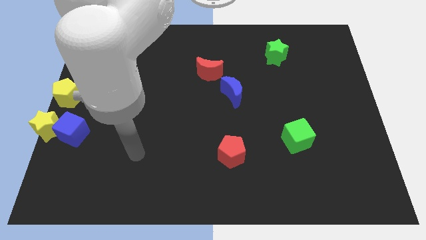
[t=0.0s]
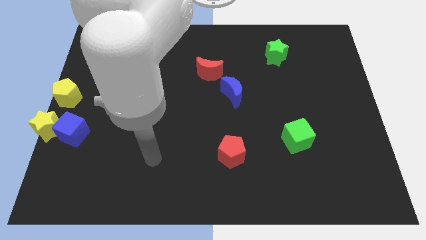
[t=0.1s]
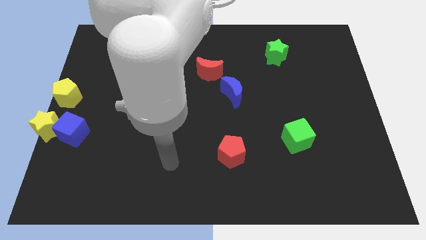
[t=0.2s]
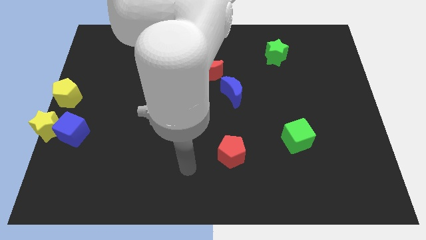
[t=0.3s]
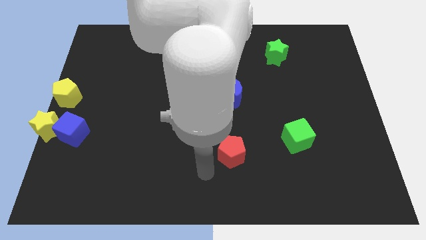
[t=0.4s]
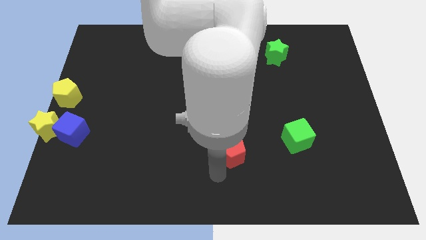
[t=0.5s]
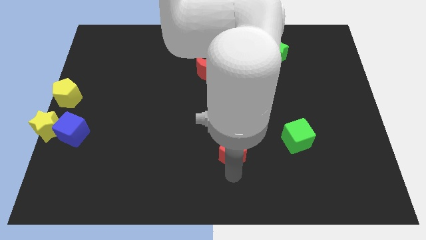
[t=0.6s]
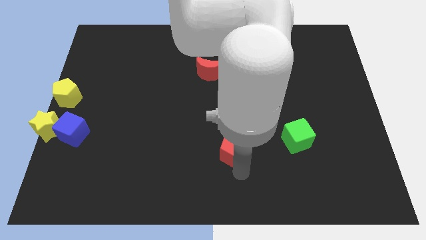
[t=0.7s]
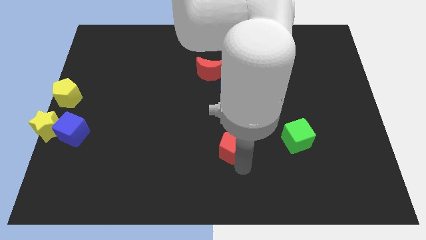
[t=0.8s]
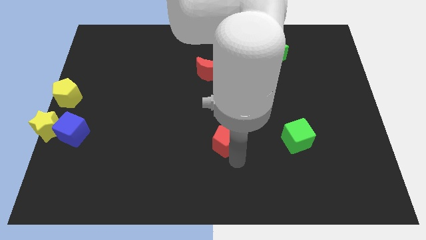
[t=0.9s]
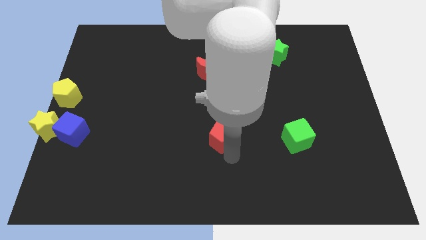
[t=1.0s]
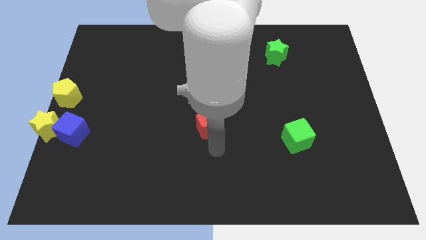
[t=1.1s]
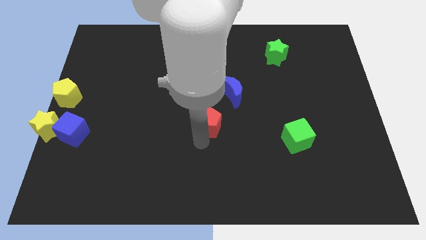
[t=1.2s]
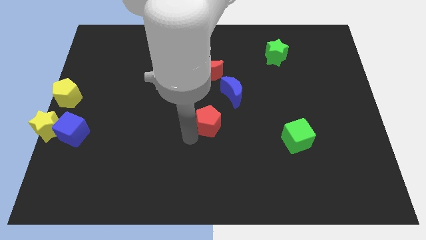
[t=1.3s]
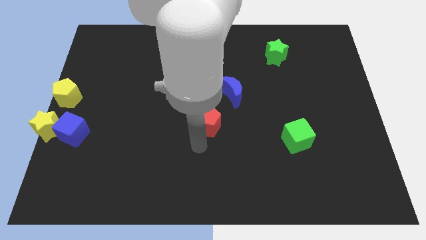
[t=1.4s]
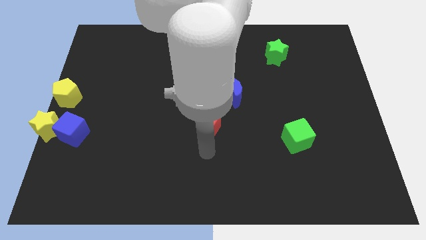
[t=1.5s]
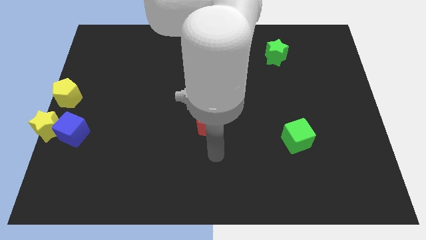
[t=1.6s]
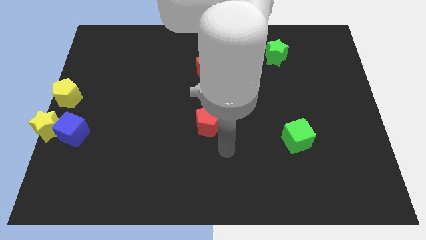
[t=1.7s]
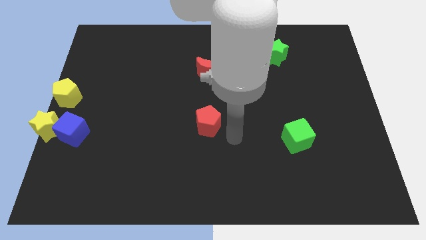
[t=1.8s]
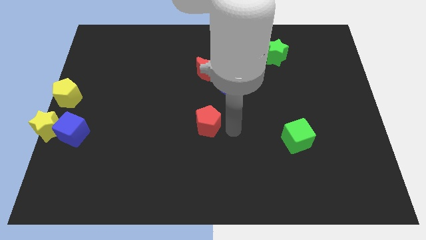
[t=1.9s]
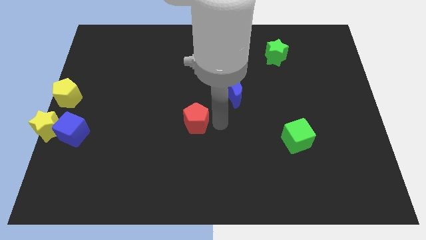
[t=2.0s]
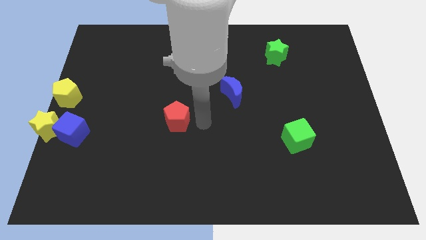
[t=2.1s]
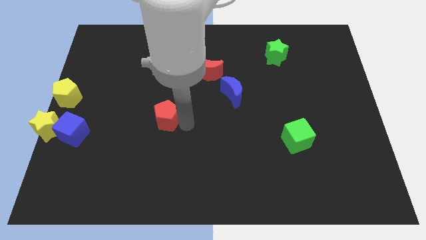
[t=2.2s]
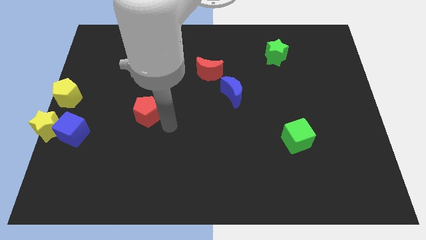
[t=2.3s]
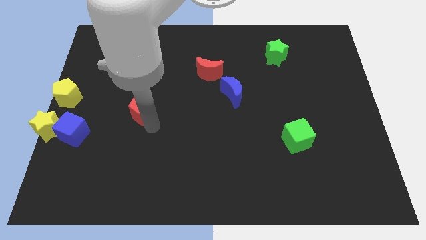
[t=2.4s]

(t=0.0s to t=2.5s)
push the red pentagon to the left center of the board

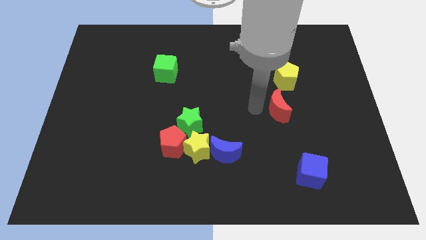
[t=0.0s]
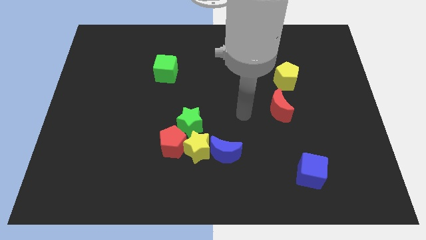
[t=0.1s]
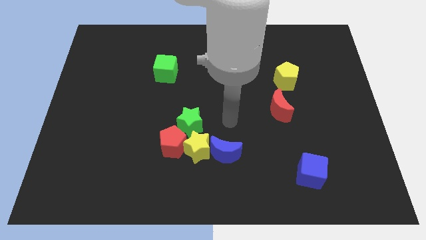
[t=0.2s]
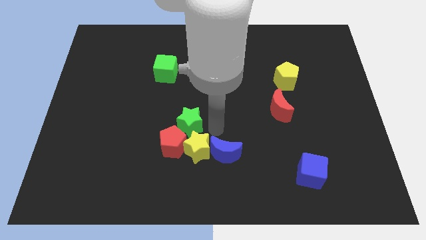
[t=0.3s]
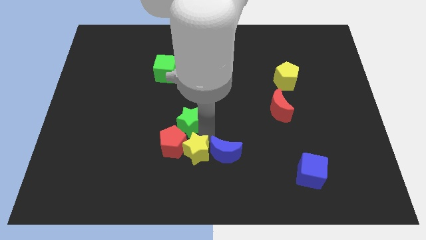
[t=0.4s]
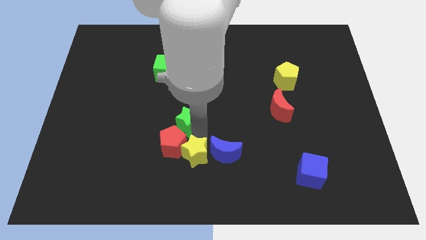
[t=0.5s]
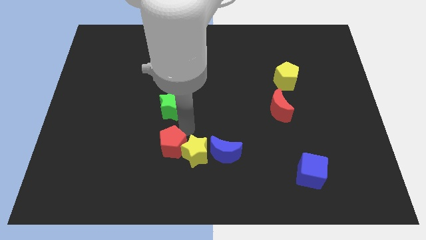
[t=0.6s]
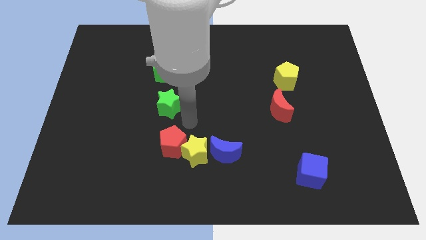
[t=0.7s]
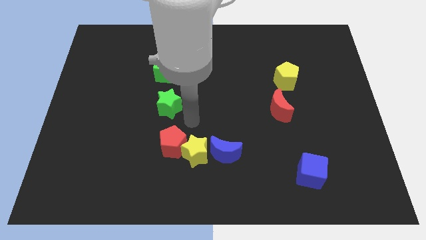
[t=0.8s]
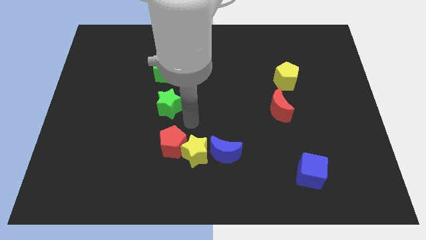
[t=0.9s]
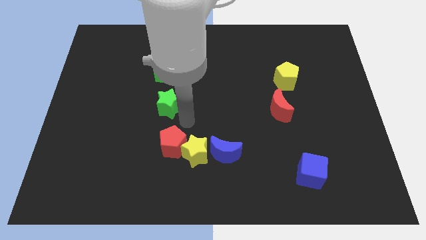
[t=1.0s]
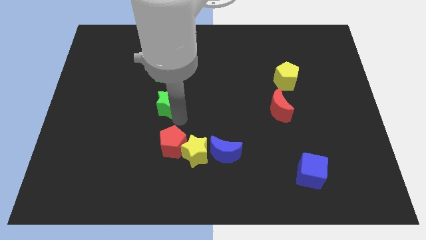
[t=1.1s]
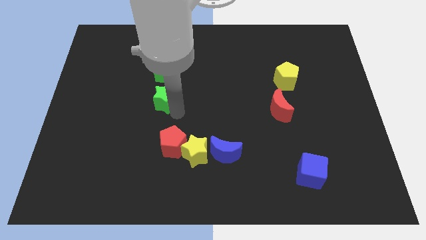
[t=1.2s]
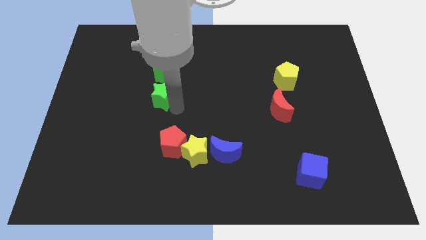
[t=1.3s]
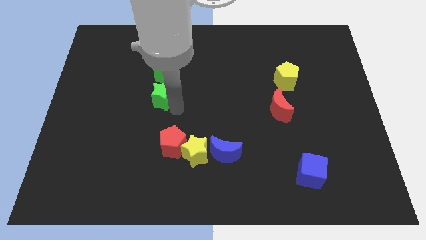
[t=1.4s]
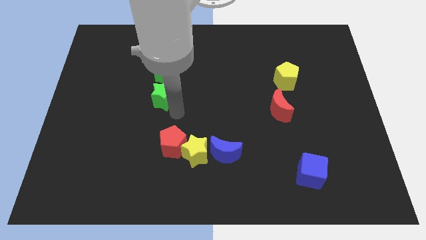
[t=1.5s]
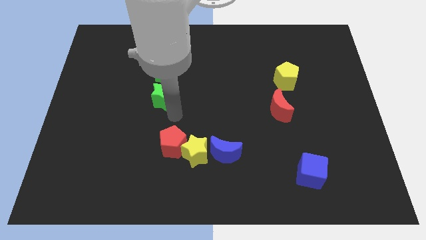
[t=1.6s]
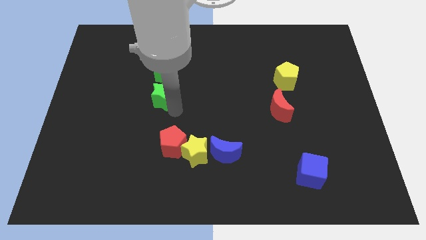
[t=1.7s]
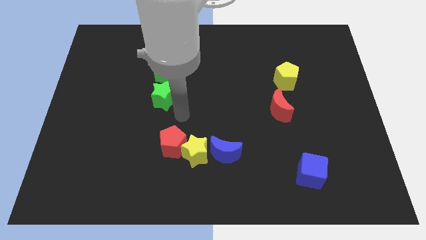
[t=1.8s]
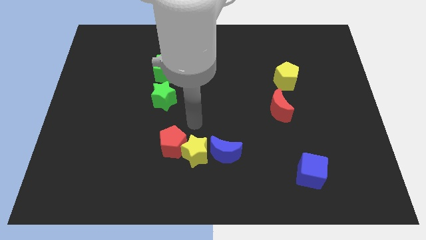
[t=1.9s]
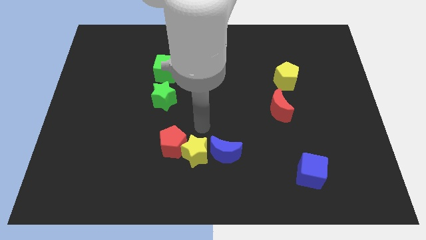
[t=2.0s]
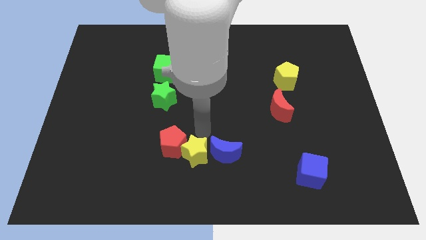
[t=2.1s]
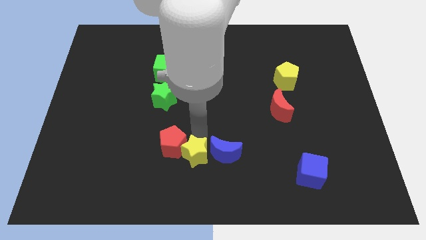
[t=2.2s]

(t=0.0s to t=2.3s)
move green star to the bottom of the green cube

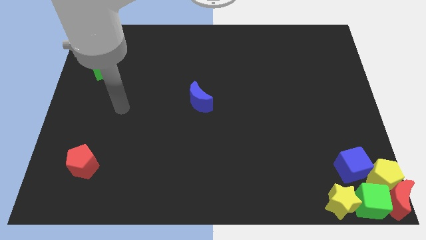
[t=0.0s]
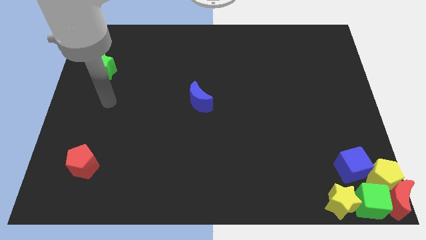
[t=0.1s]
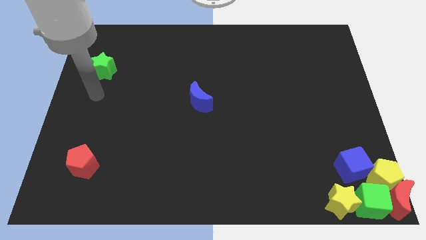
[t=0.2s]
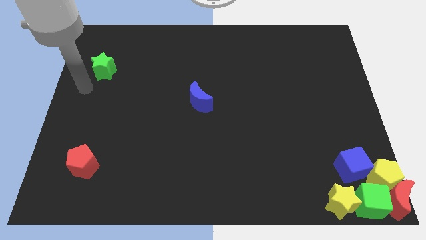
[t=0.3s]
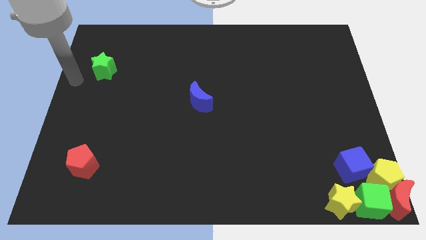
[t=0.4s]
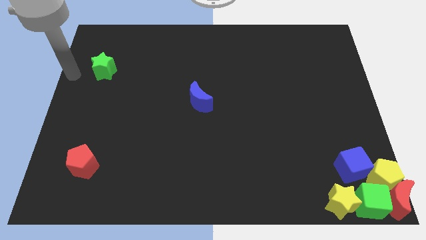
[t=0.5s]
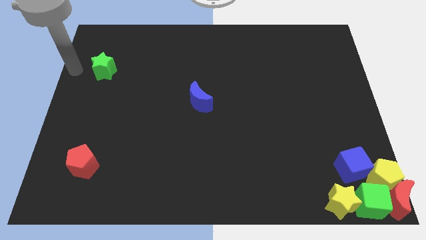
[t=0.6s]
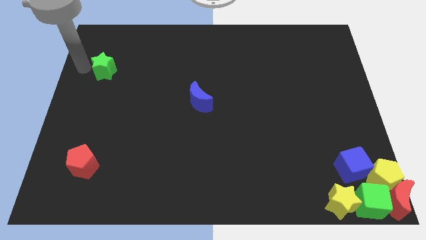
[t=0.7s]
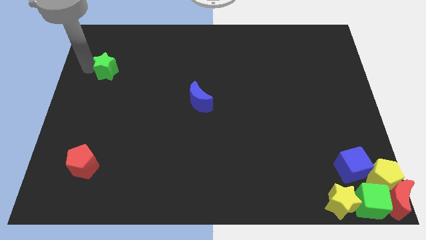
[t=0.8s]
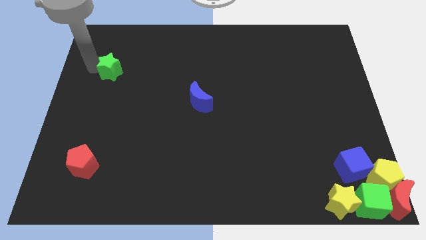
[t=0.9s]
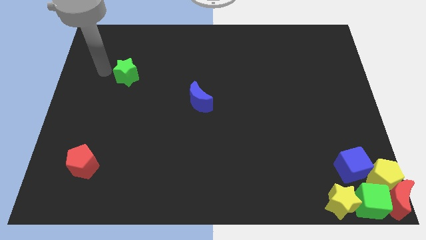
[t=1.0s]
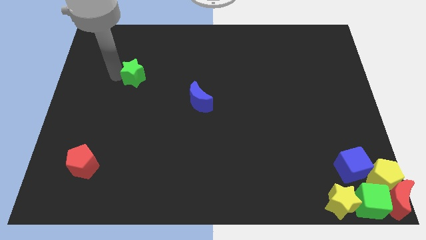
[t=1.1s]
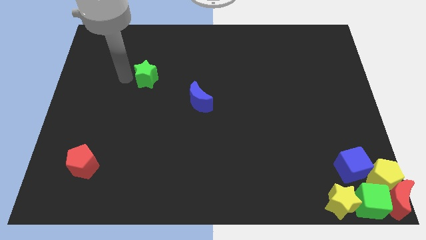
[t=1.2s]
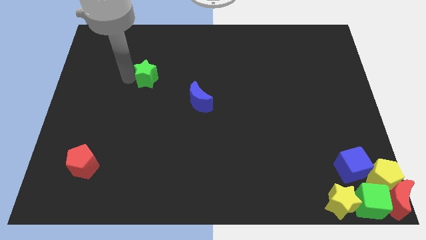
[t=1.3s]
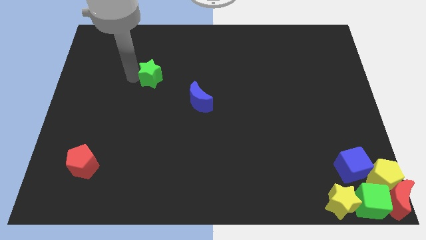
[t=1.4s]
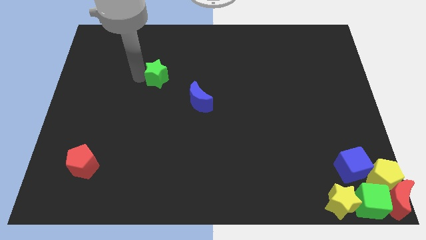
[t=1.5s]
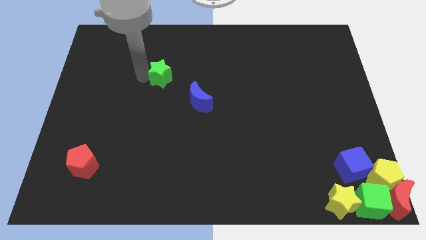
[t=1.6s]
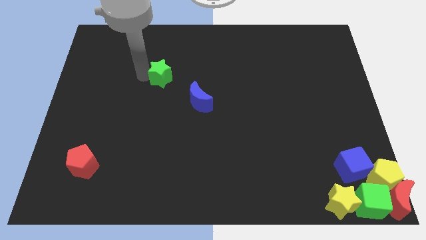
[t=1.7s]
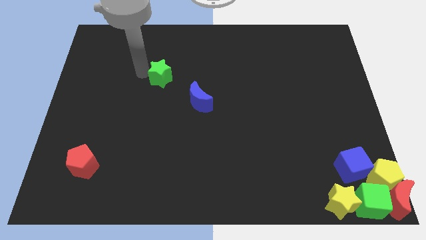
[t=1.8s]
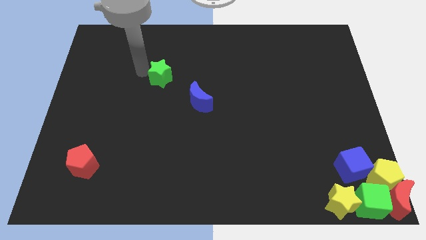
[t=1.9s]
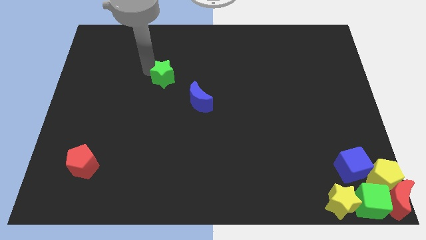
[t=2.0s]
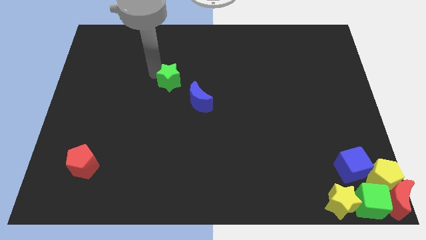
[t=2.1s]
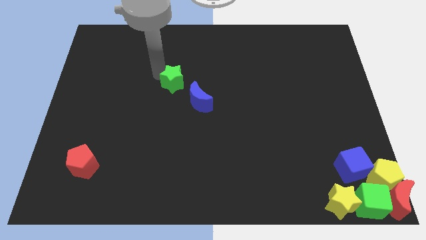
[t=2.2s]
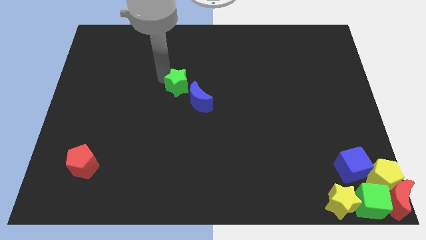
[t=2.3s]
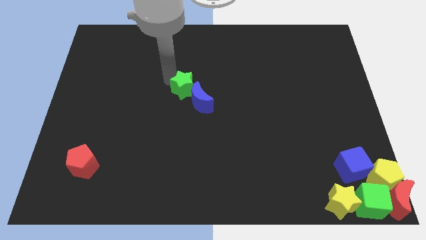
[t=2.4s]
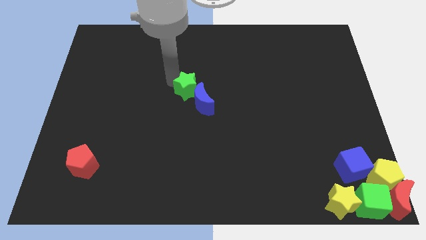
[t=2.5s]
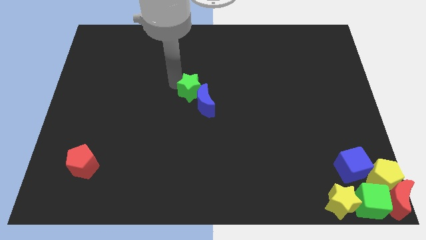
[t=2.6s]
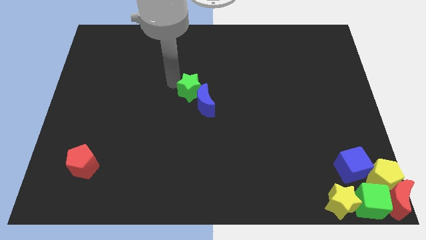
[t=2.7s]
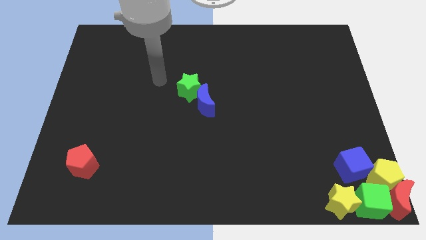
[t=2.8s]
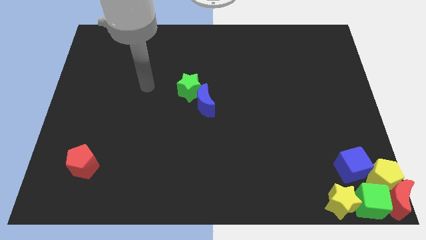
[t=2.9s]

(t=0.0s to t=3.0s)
move the green star into the blue moon

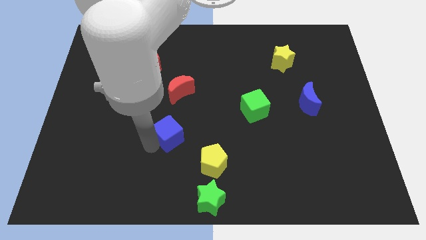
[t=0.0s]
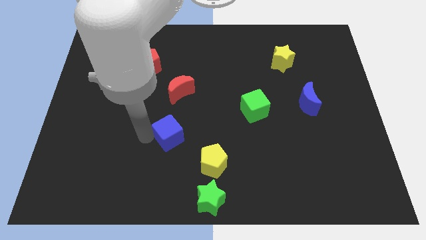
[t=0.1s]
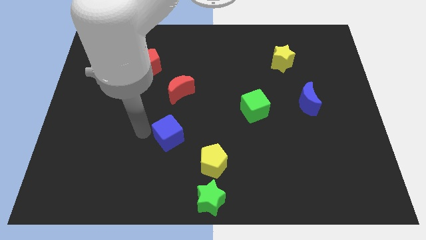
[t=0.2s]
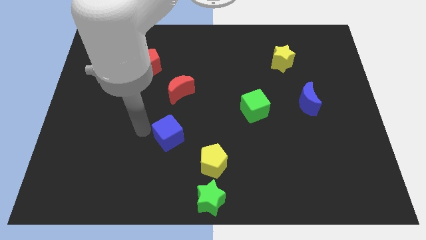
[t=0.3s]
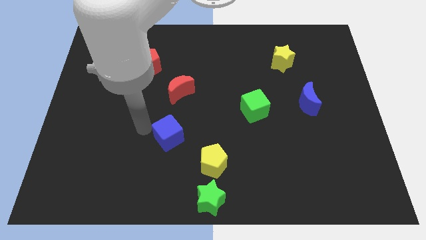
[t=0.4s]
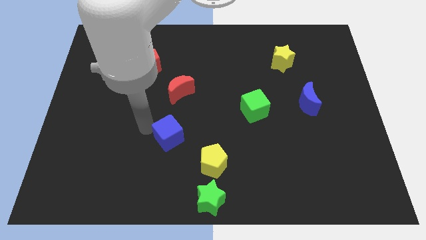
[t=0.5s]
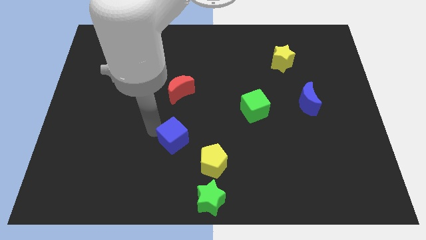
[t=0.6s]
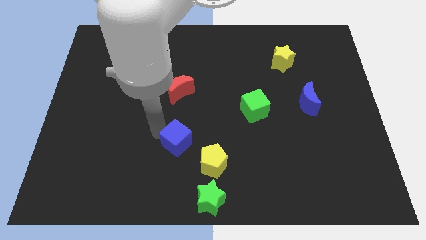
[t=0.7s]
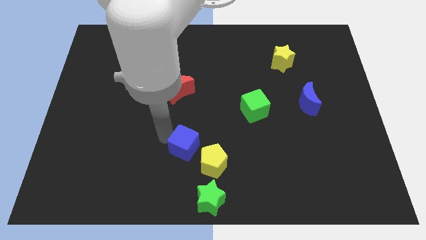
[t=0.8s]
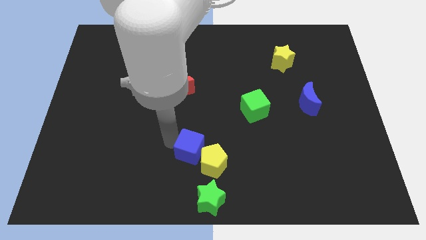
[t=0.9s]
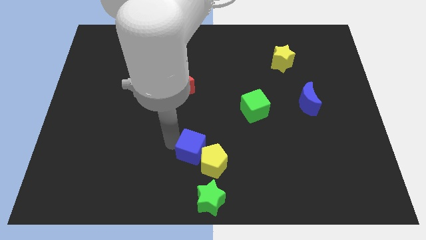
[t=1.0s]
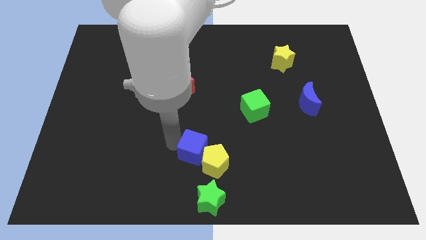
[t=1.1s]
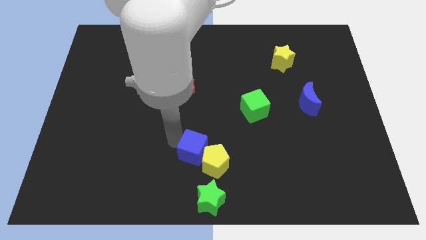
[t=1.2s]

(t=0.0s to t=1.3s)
move the blue cube into the yellow pentagon
